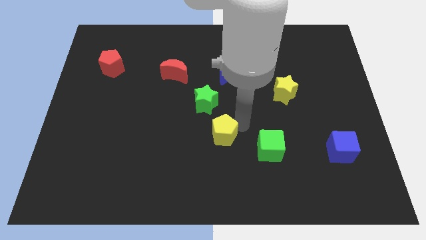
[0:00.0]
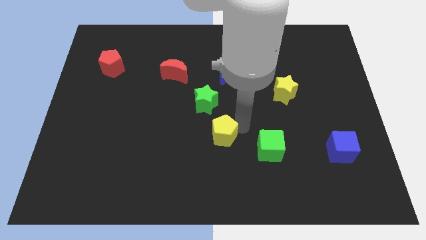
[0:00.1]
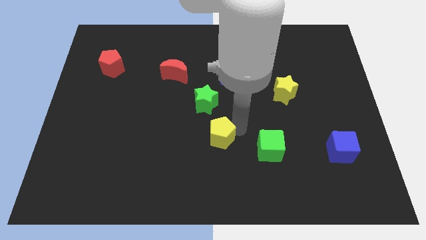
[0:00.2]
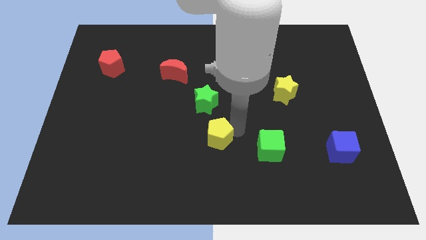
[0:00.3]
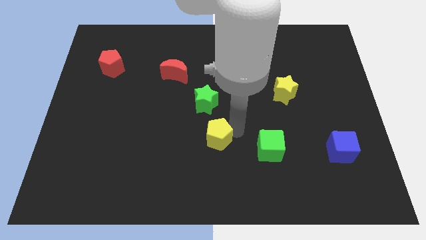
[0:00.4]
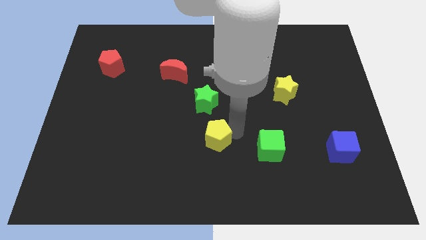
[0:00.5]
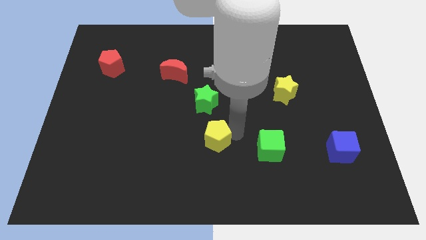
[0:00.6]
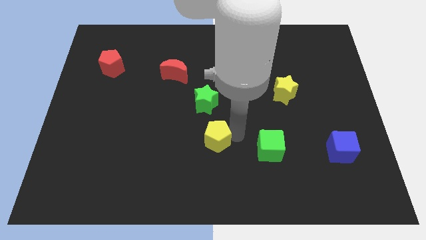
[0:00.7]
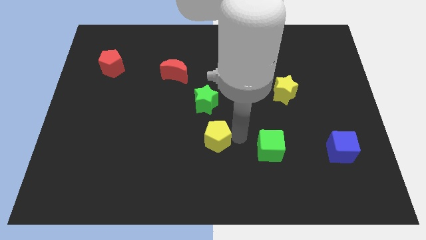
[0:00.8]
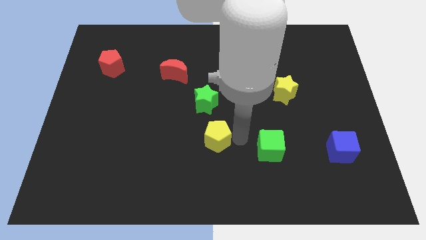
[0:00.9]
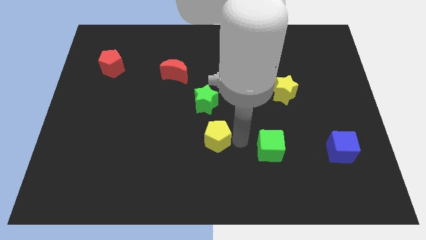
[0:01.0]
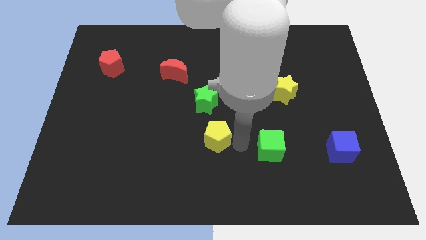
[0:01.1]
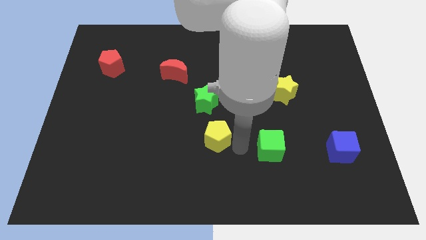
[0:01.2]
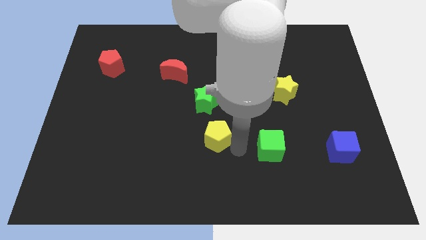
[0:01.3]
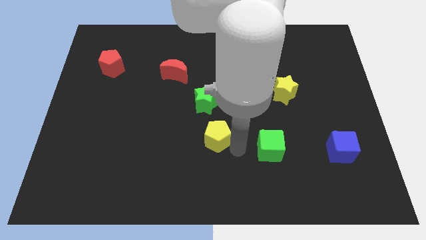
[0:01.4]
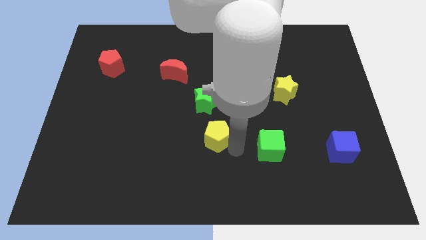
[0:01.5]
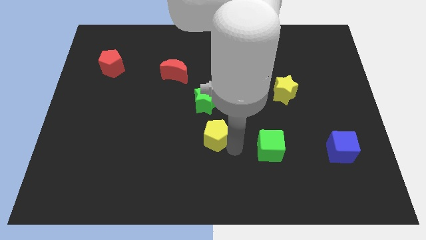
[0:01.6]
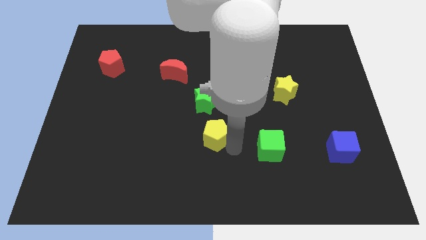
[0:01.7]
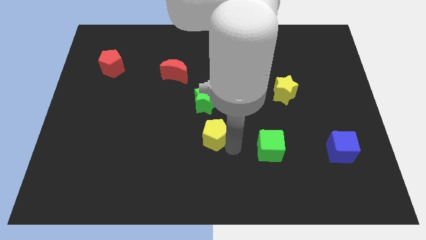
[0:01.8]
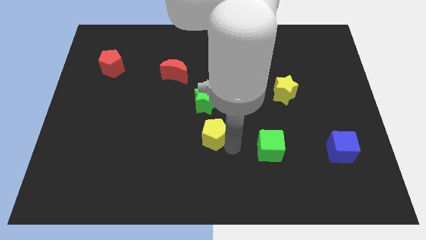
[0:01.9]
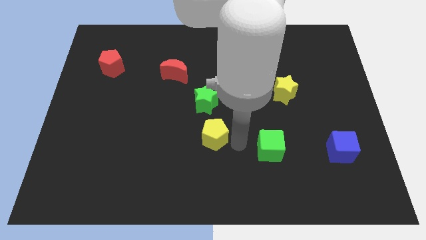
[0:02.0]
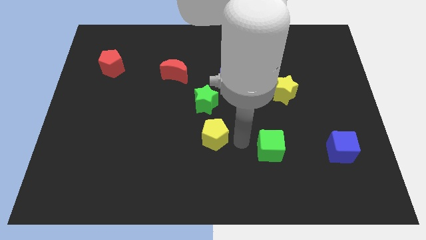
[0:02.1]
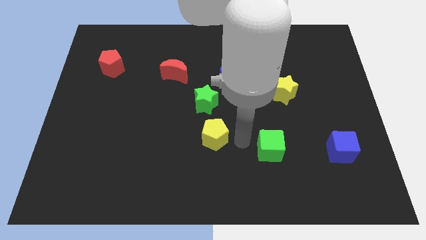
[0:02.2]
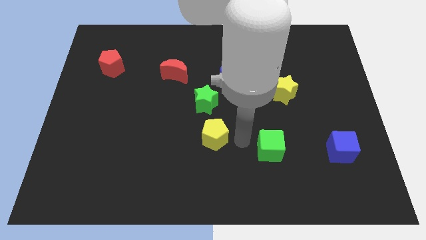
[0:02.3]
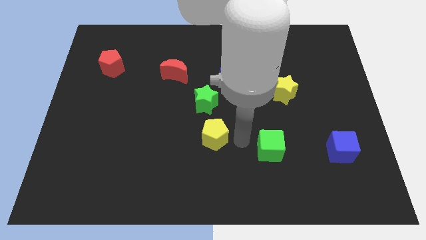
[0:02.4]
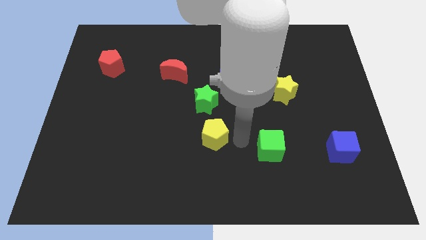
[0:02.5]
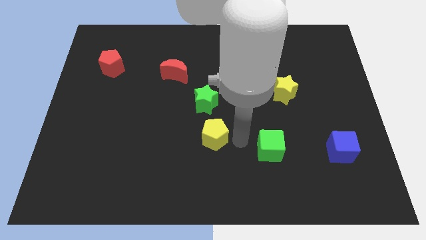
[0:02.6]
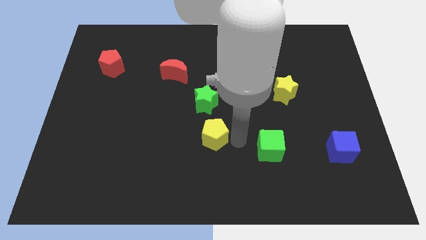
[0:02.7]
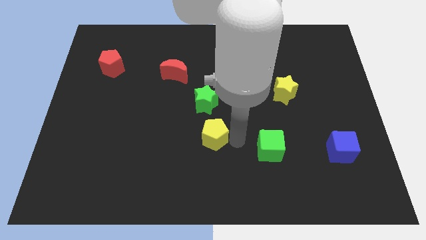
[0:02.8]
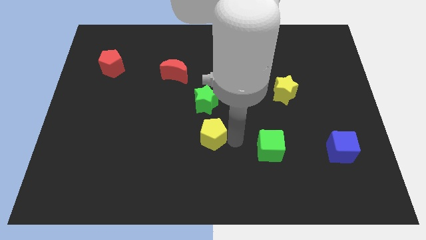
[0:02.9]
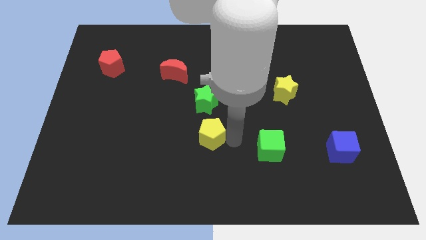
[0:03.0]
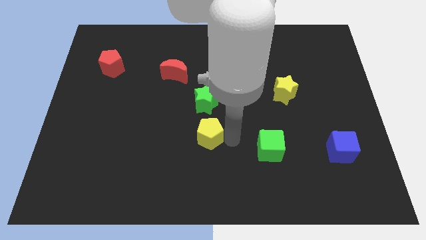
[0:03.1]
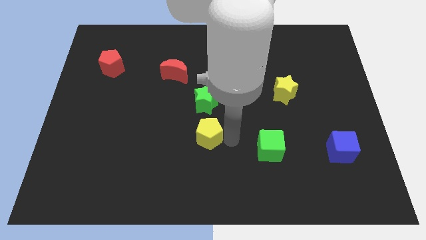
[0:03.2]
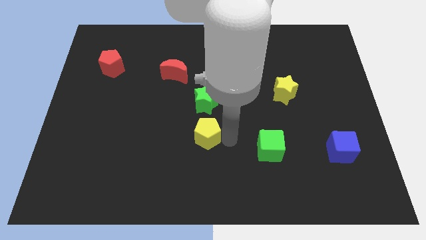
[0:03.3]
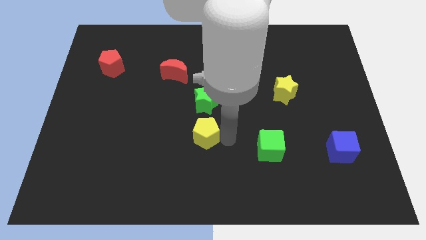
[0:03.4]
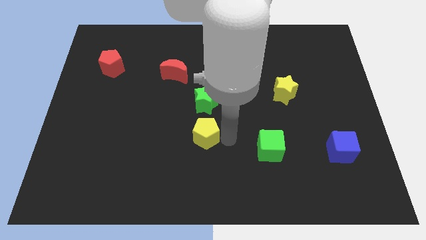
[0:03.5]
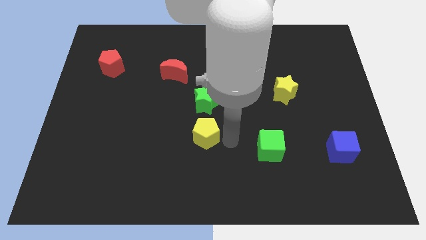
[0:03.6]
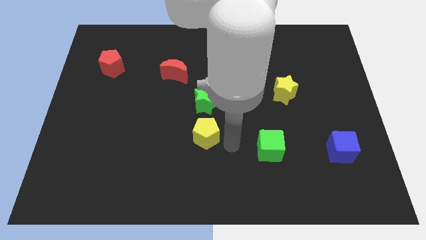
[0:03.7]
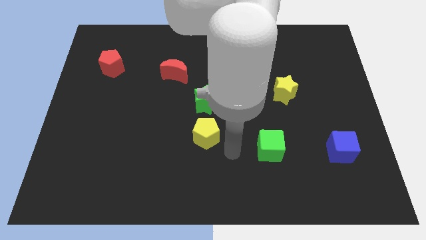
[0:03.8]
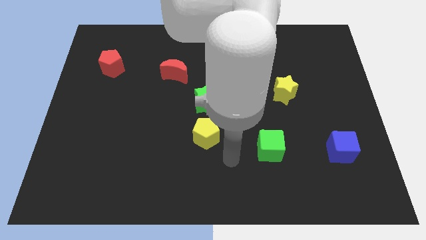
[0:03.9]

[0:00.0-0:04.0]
move the yellow pentagon to the bottom of the green star

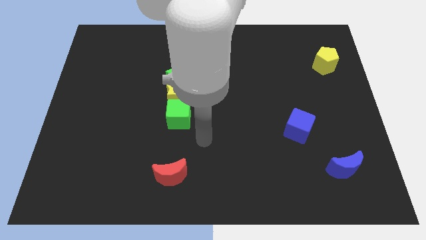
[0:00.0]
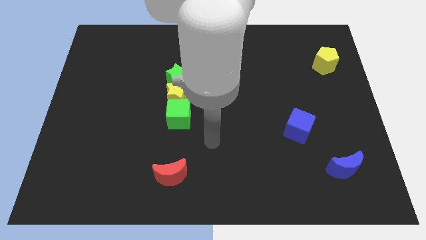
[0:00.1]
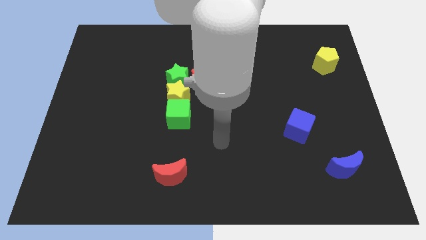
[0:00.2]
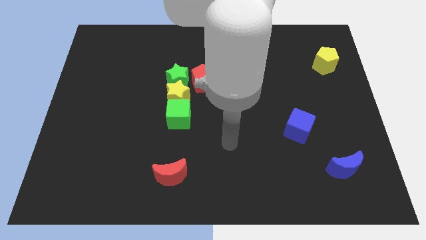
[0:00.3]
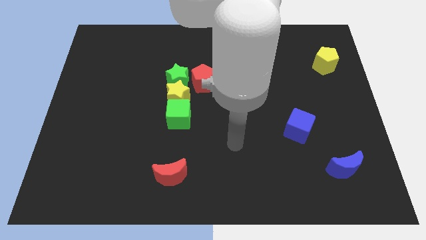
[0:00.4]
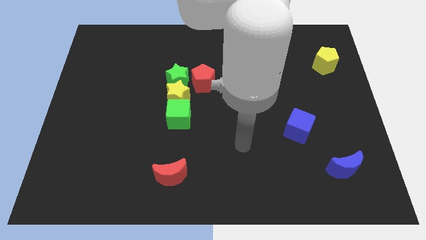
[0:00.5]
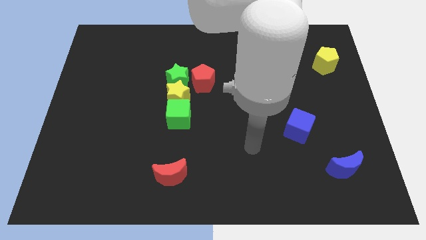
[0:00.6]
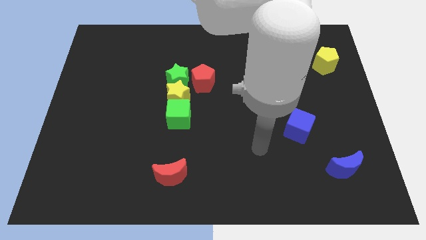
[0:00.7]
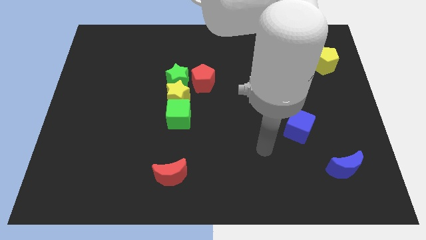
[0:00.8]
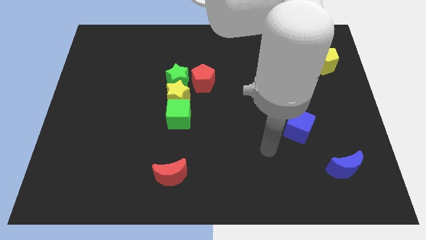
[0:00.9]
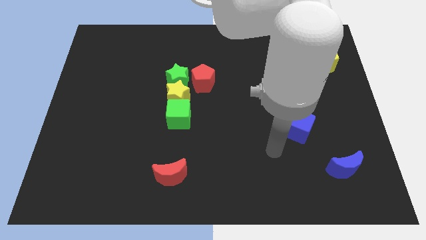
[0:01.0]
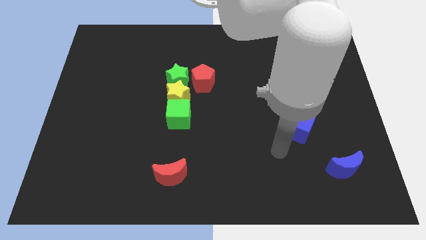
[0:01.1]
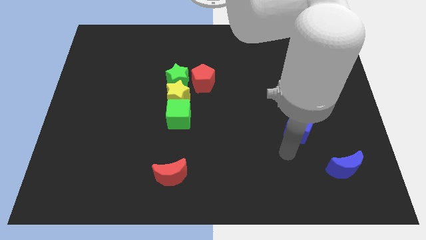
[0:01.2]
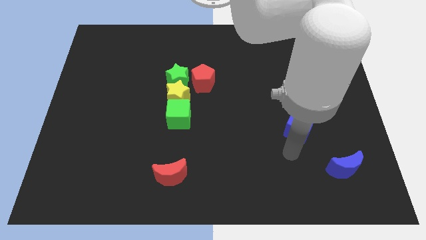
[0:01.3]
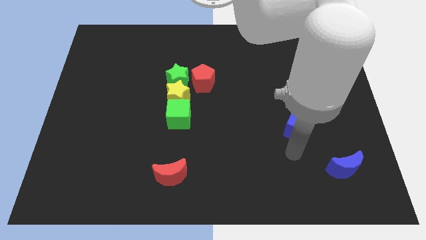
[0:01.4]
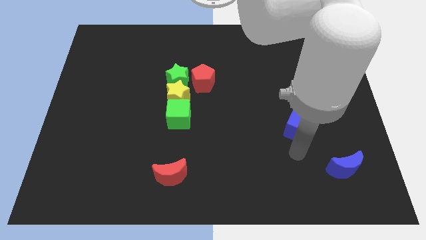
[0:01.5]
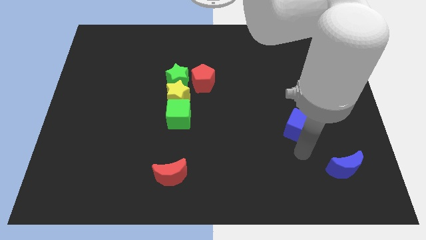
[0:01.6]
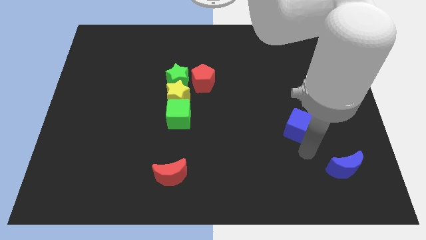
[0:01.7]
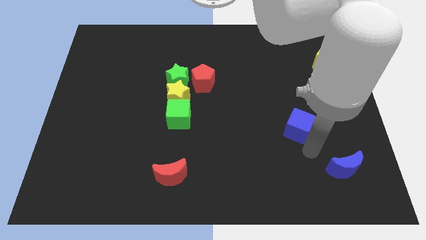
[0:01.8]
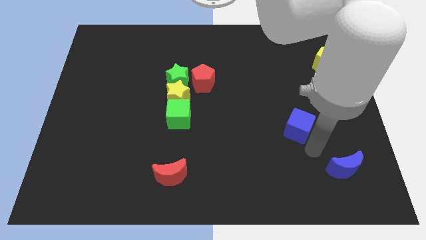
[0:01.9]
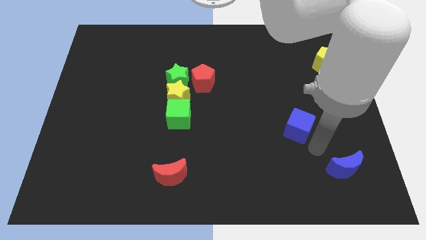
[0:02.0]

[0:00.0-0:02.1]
point your arm in between the blue cube and the blue moon

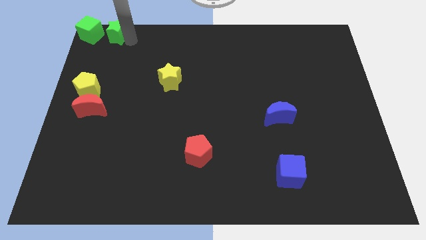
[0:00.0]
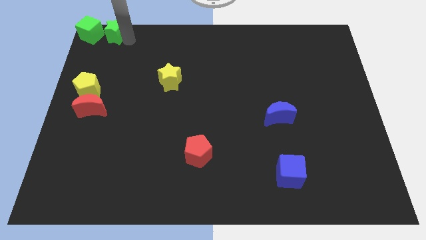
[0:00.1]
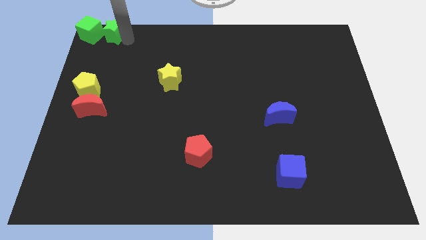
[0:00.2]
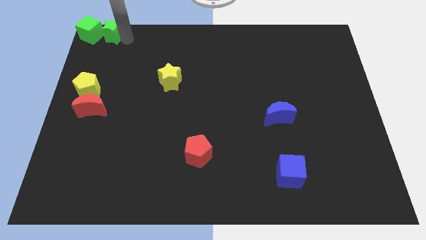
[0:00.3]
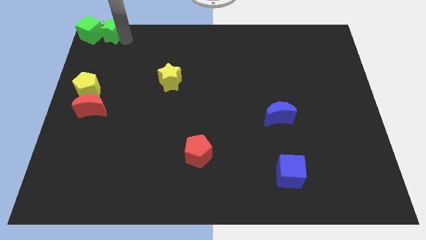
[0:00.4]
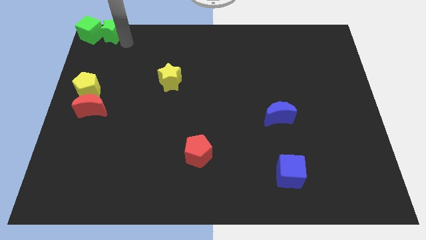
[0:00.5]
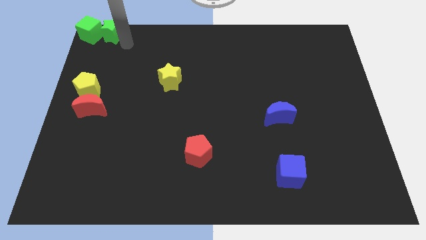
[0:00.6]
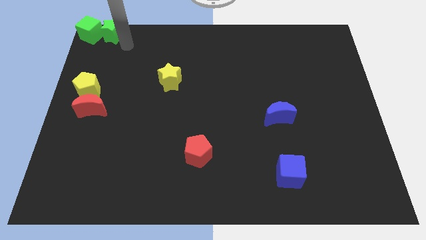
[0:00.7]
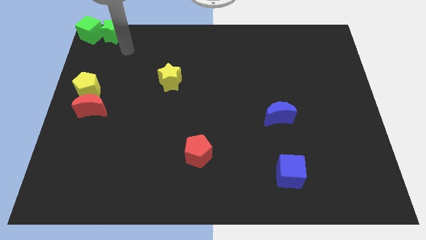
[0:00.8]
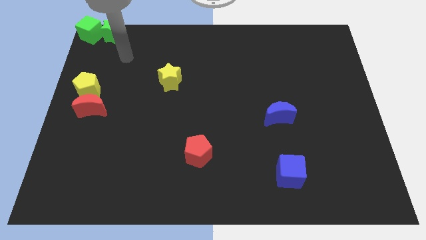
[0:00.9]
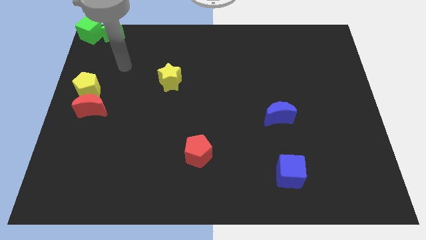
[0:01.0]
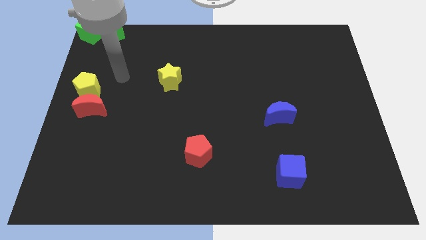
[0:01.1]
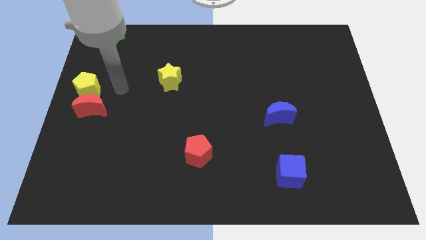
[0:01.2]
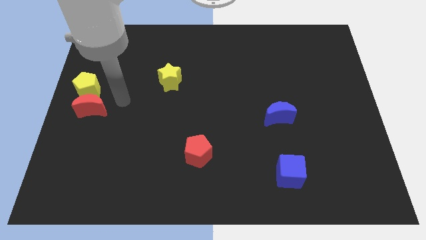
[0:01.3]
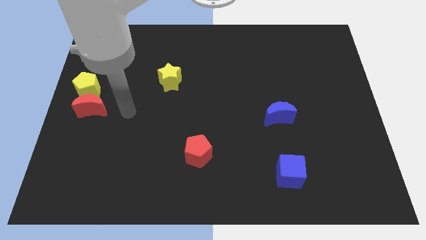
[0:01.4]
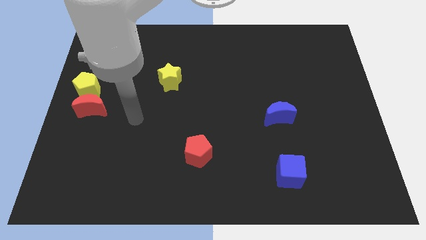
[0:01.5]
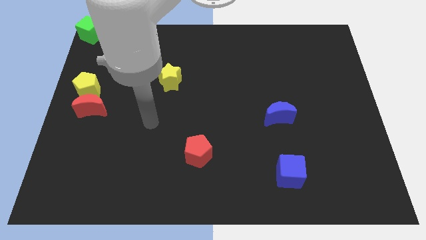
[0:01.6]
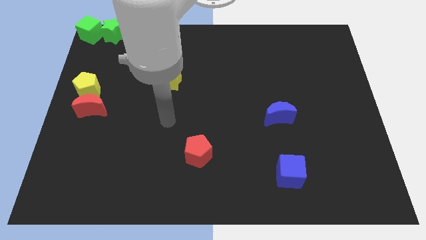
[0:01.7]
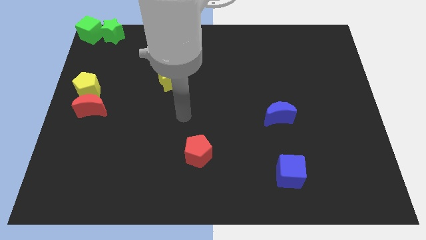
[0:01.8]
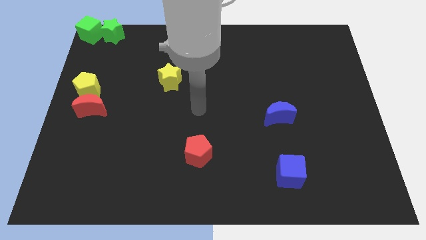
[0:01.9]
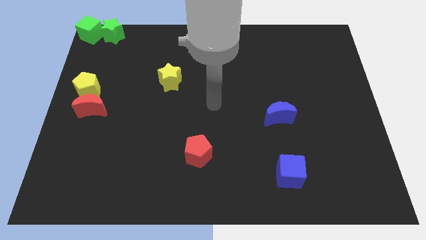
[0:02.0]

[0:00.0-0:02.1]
move yourself away from the green star

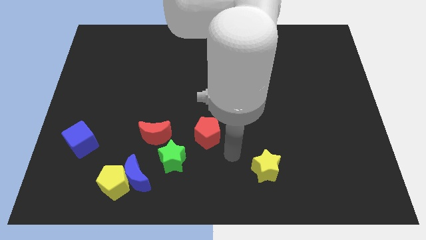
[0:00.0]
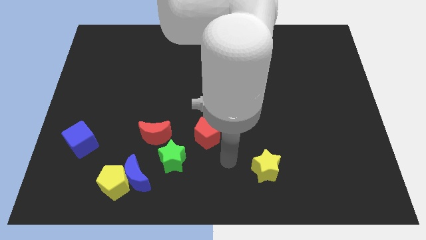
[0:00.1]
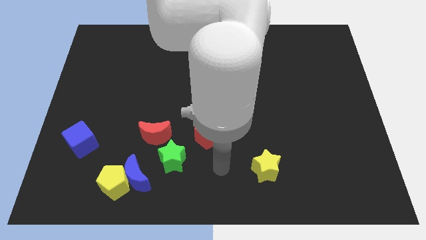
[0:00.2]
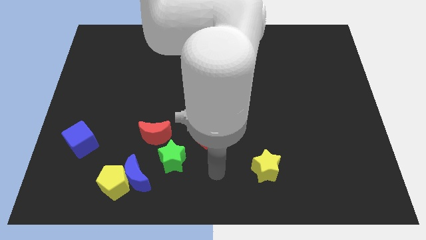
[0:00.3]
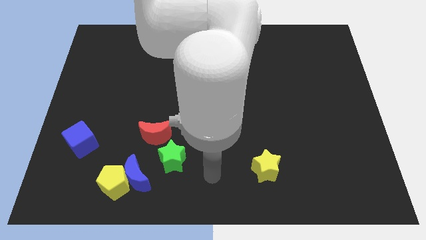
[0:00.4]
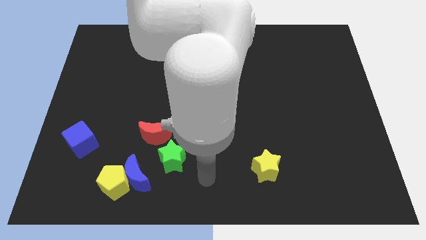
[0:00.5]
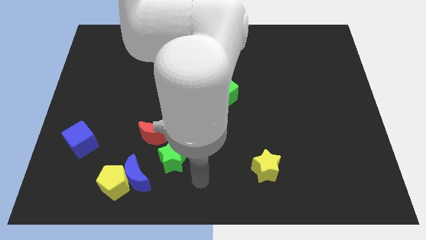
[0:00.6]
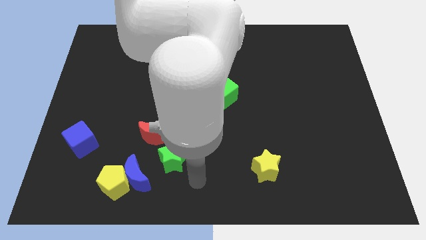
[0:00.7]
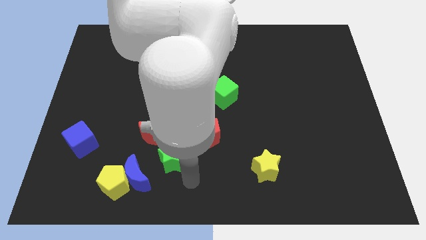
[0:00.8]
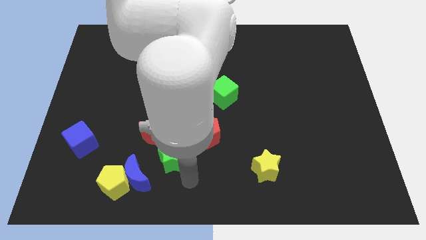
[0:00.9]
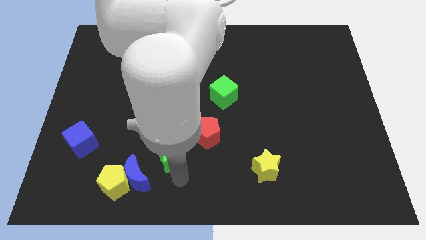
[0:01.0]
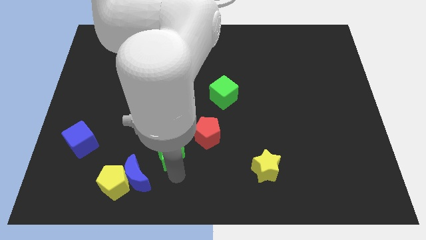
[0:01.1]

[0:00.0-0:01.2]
place your arm below green star
